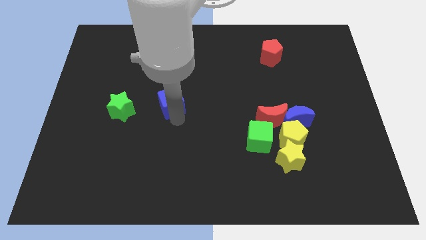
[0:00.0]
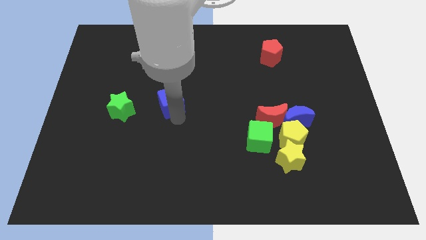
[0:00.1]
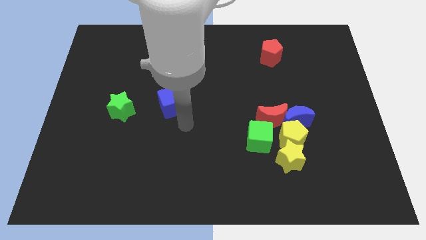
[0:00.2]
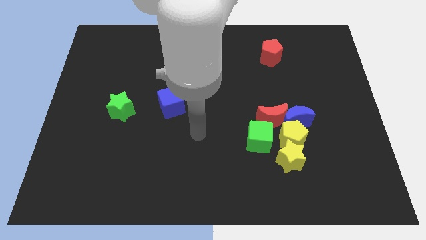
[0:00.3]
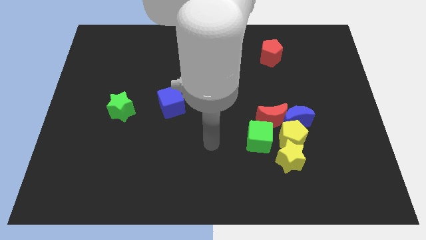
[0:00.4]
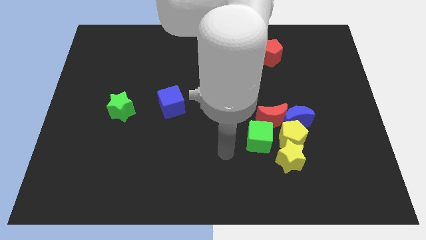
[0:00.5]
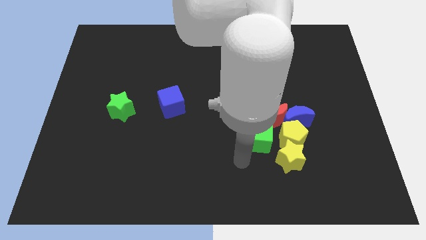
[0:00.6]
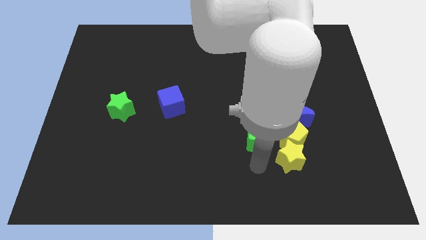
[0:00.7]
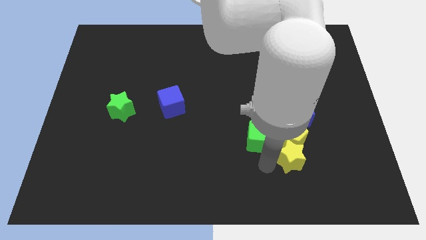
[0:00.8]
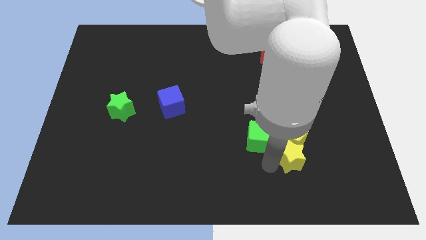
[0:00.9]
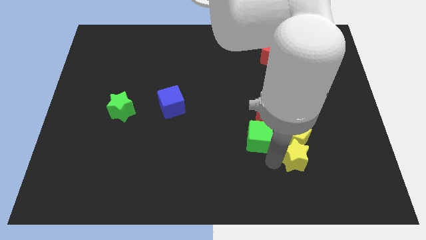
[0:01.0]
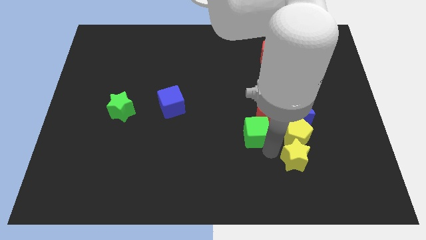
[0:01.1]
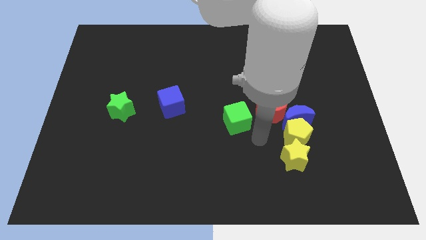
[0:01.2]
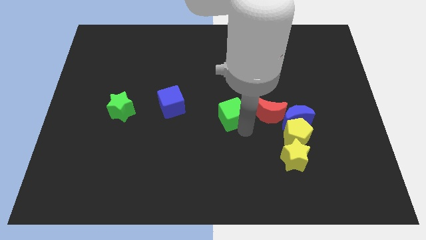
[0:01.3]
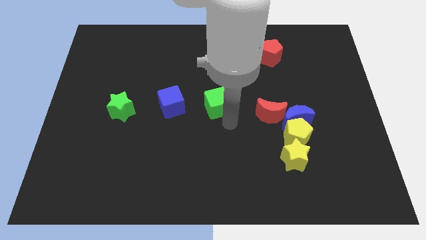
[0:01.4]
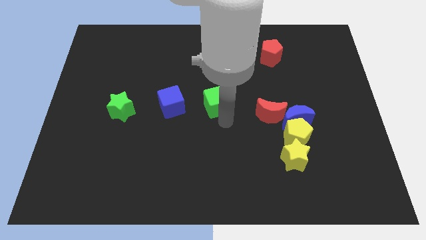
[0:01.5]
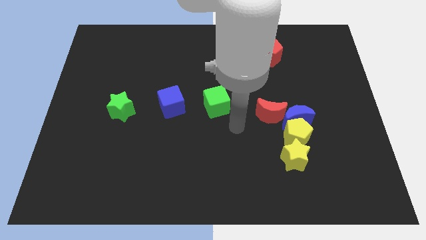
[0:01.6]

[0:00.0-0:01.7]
move the green cube up slightly

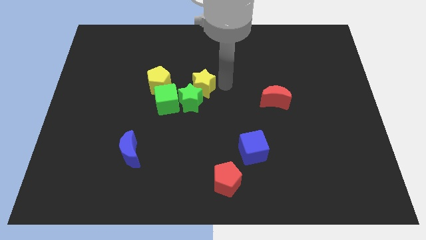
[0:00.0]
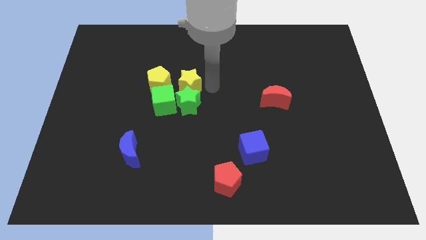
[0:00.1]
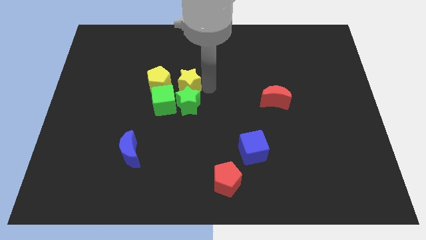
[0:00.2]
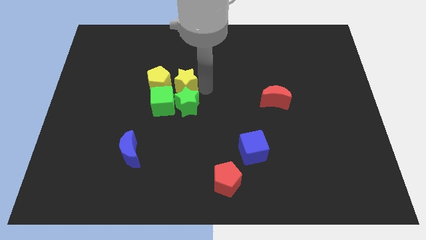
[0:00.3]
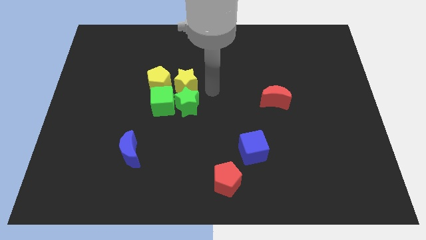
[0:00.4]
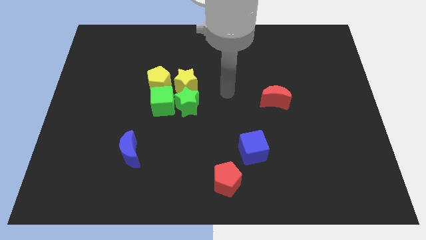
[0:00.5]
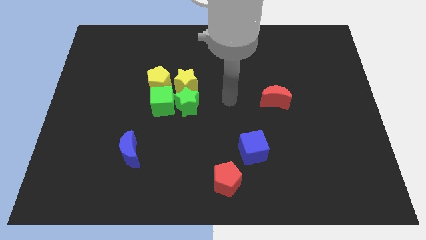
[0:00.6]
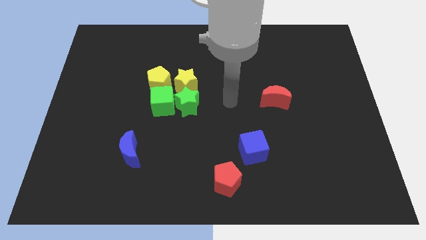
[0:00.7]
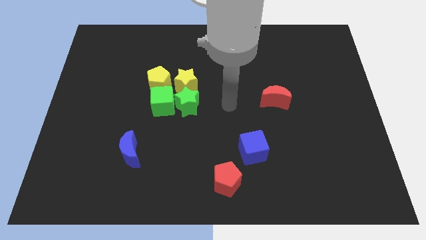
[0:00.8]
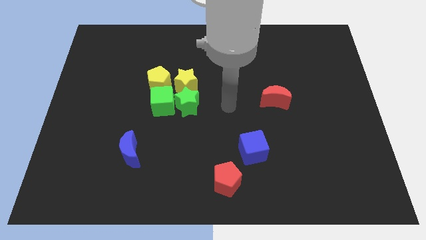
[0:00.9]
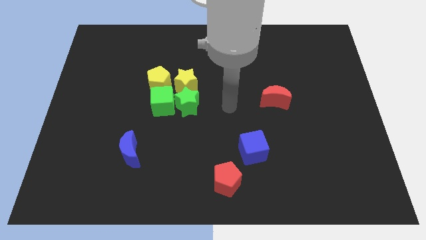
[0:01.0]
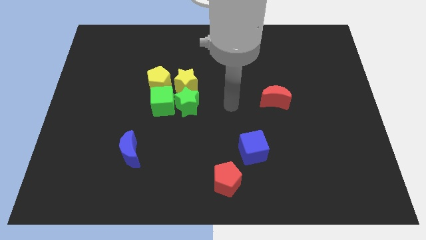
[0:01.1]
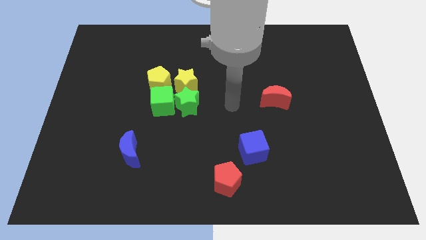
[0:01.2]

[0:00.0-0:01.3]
make a group by adding yellow star

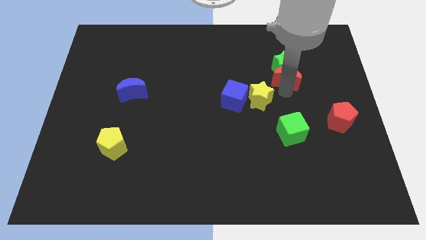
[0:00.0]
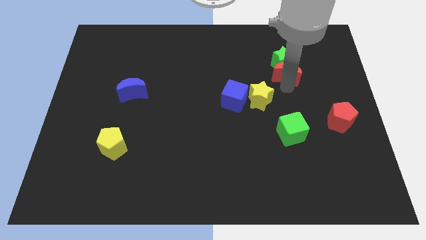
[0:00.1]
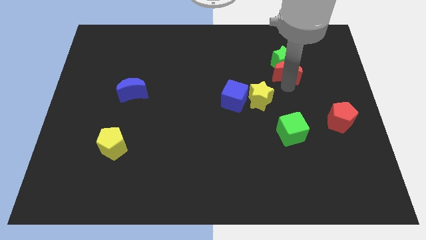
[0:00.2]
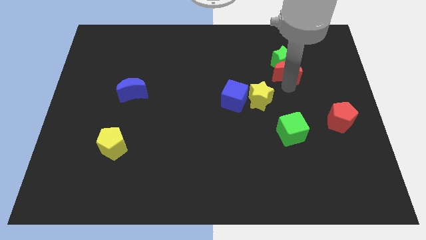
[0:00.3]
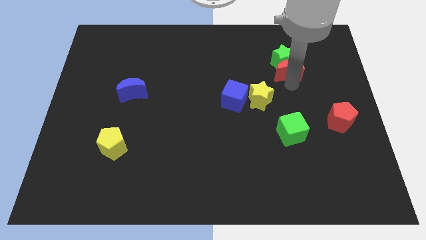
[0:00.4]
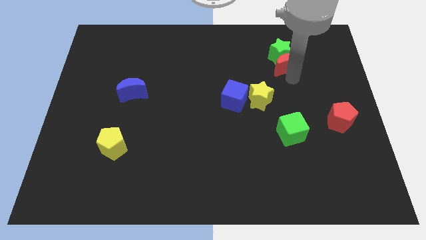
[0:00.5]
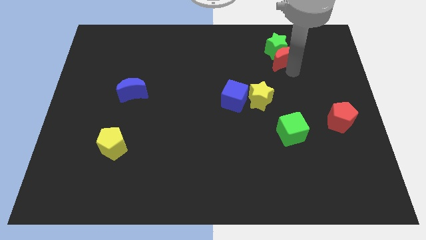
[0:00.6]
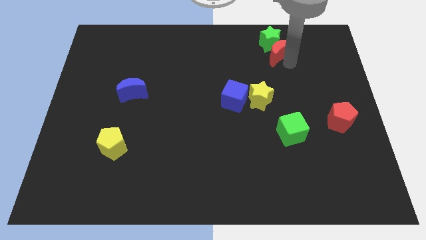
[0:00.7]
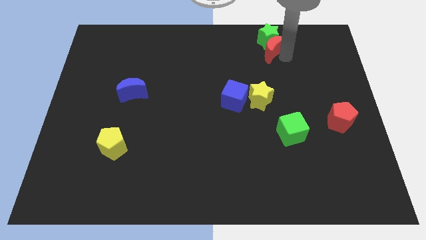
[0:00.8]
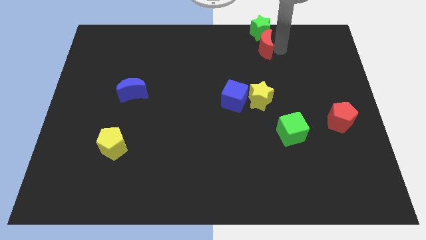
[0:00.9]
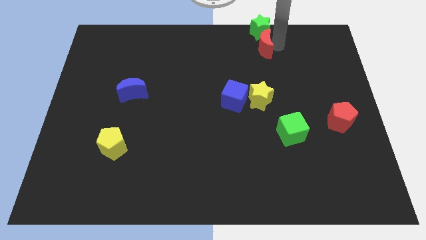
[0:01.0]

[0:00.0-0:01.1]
push the red crescent and green star to the top

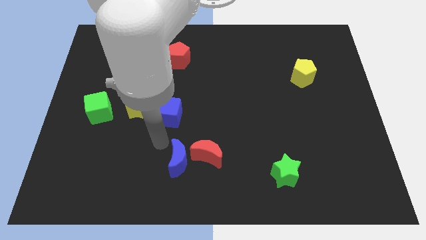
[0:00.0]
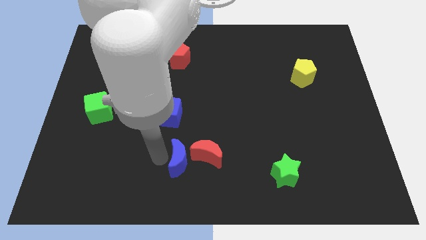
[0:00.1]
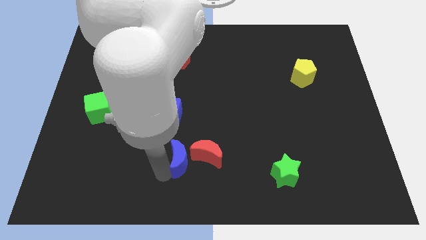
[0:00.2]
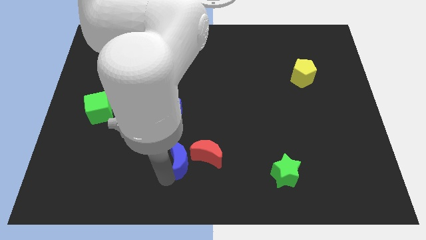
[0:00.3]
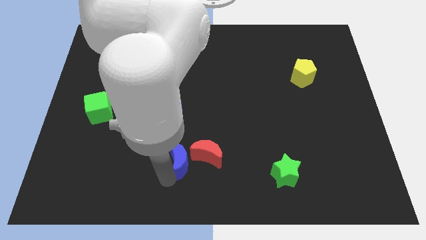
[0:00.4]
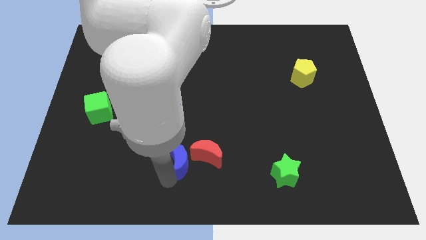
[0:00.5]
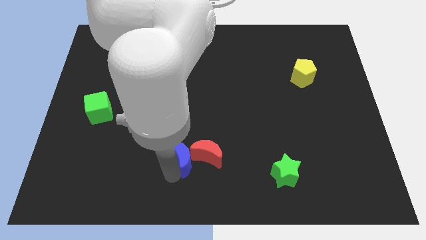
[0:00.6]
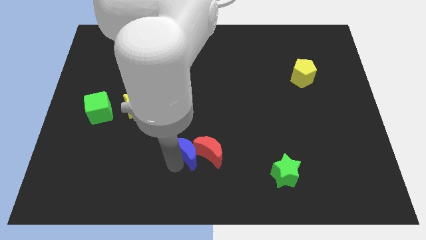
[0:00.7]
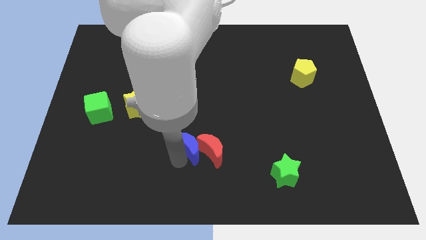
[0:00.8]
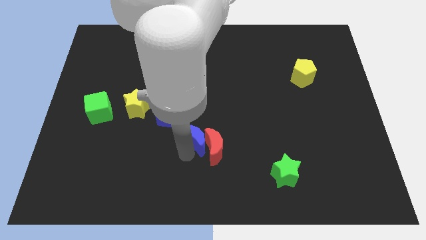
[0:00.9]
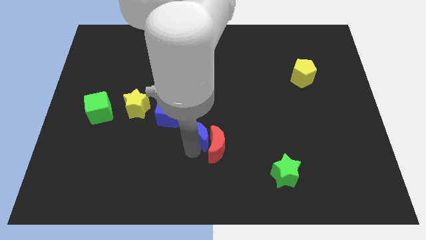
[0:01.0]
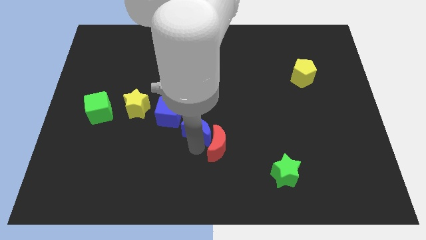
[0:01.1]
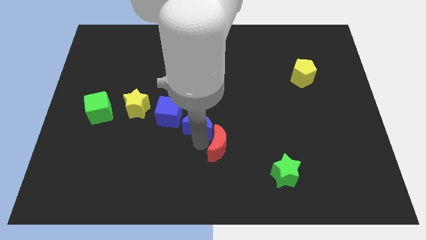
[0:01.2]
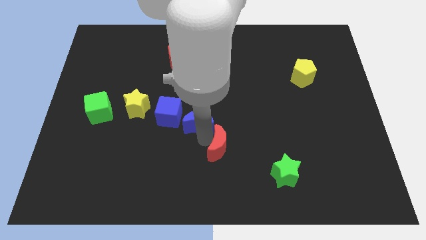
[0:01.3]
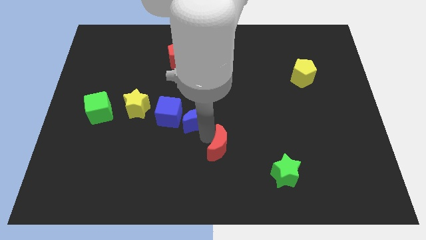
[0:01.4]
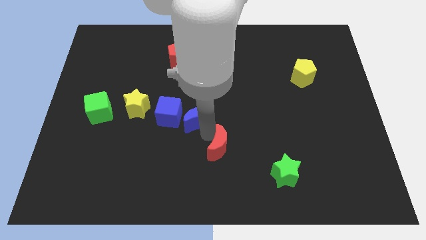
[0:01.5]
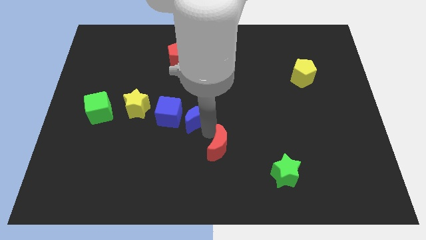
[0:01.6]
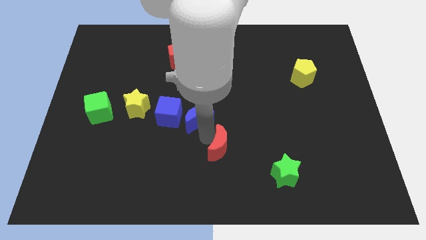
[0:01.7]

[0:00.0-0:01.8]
move the blue crescent to the right of the blue cube

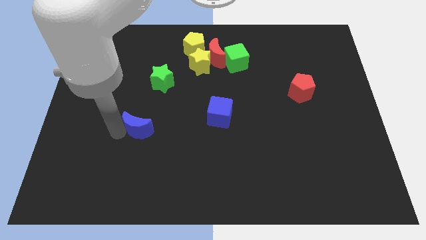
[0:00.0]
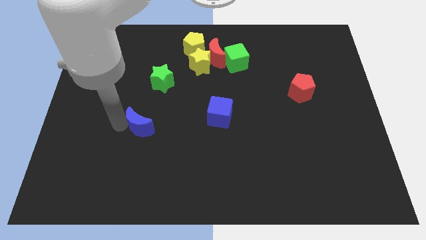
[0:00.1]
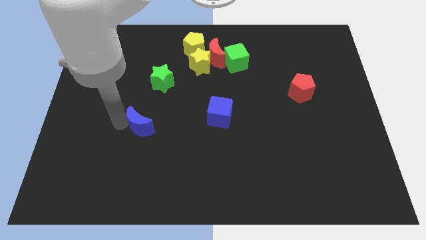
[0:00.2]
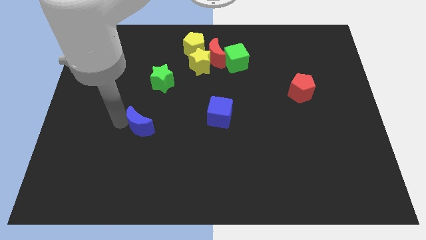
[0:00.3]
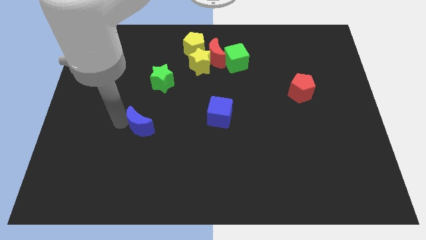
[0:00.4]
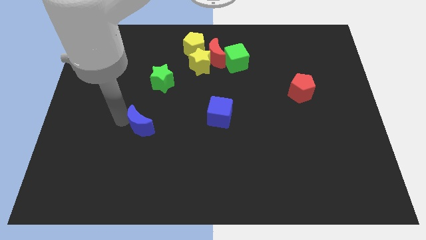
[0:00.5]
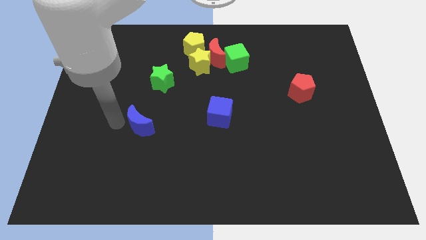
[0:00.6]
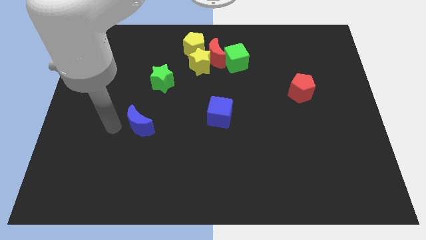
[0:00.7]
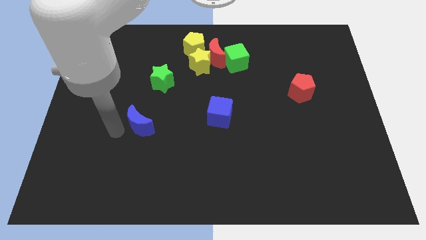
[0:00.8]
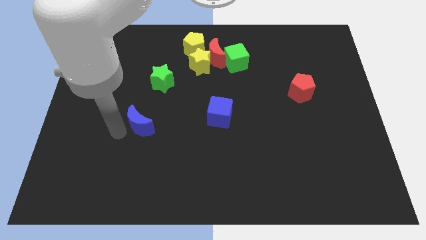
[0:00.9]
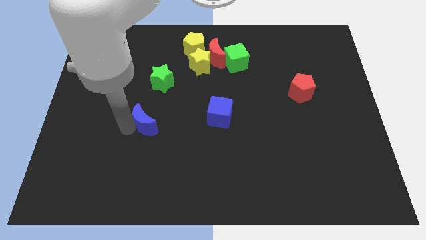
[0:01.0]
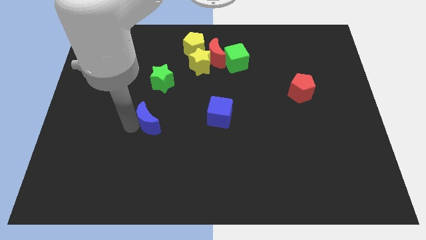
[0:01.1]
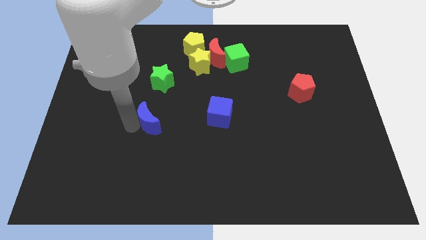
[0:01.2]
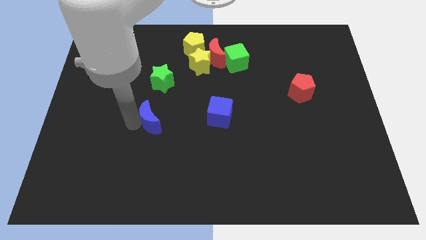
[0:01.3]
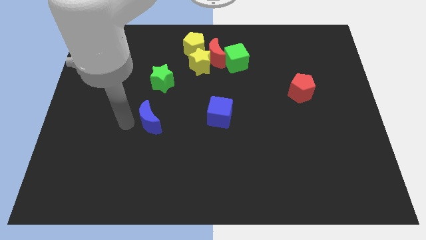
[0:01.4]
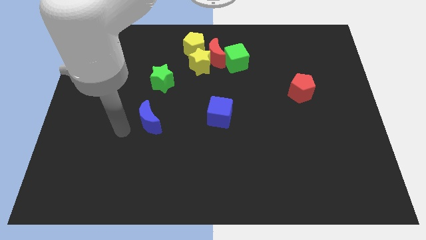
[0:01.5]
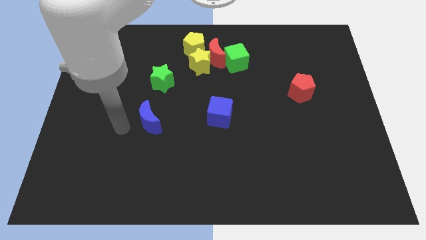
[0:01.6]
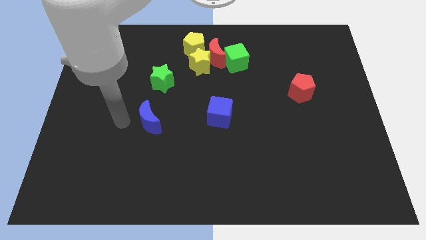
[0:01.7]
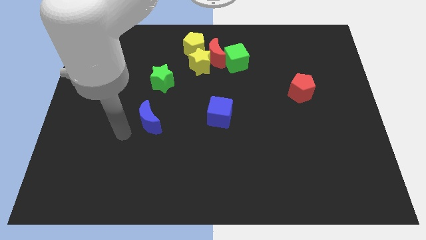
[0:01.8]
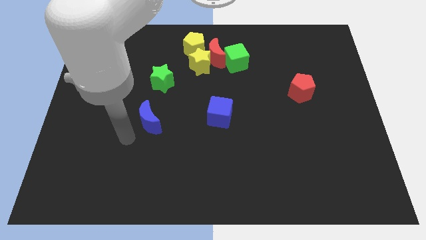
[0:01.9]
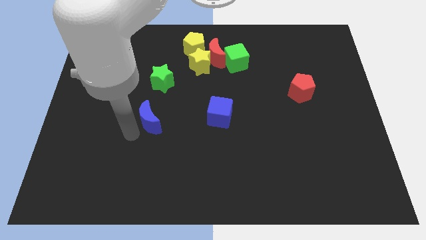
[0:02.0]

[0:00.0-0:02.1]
push blue crescent vertical to green star

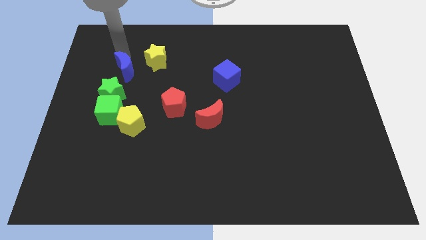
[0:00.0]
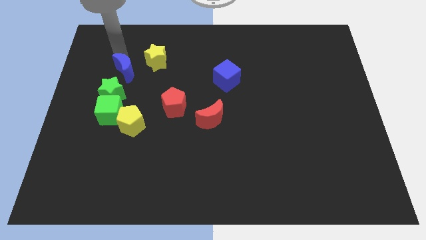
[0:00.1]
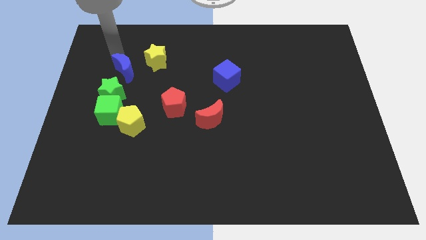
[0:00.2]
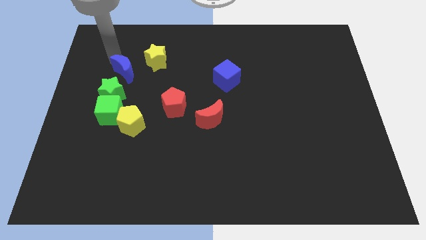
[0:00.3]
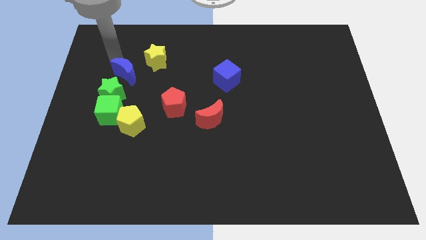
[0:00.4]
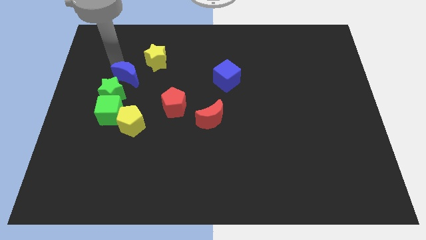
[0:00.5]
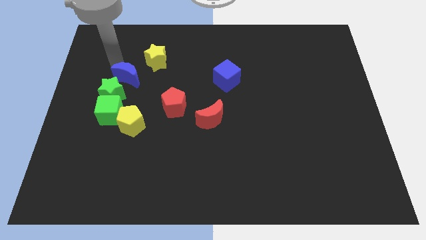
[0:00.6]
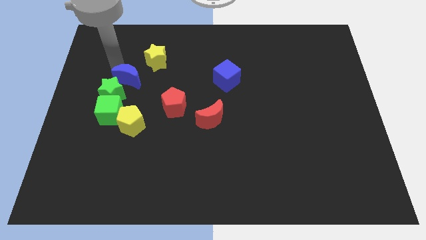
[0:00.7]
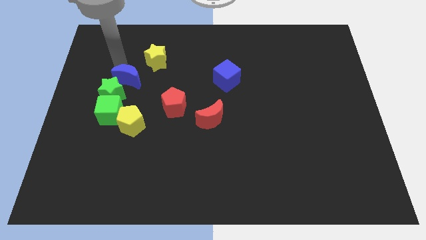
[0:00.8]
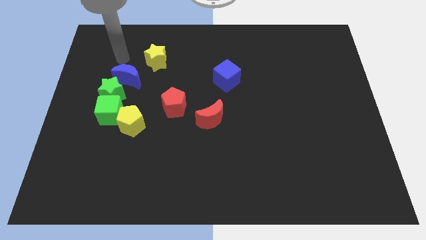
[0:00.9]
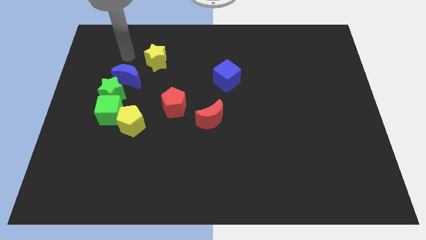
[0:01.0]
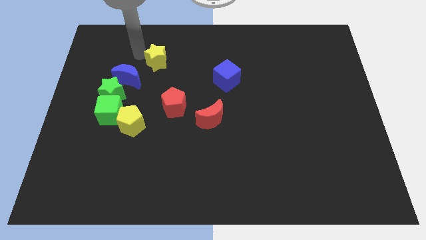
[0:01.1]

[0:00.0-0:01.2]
place the arm left to the yellow star
